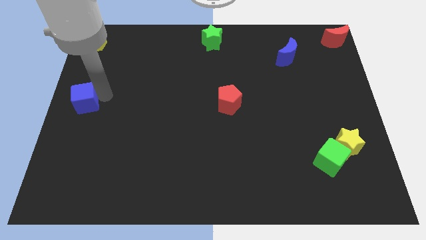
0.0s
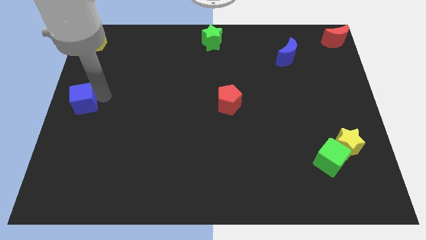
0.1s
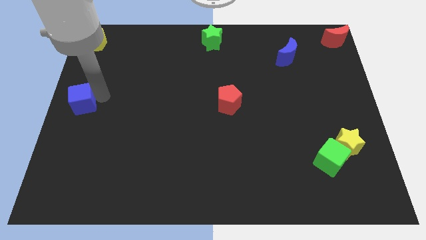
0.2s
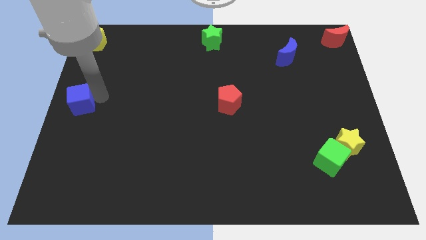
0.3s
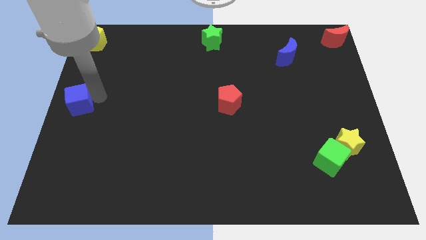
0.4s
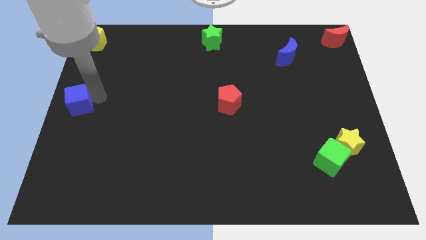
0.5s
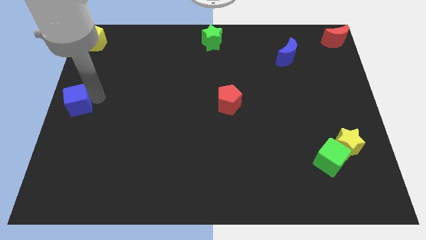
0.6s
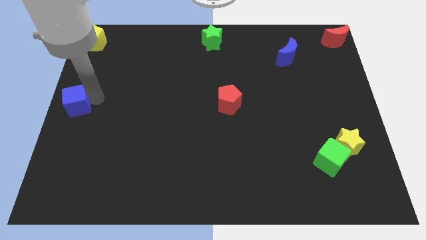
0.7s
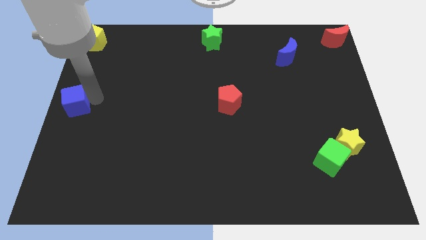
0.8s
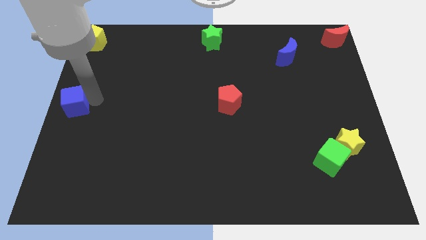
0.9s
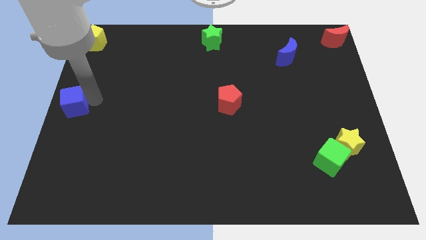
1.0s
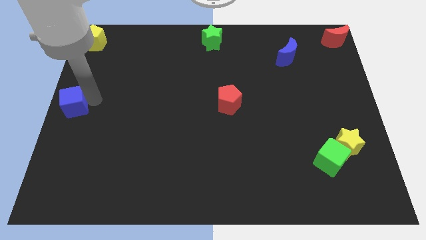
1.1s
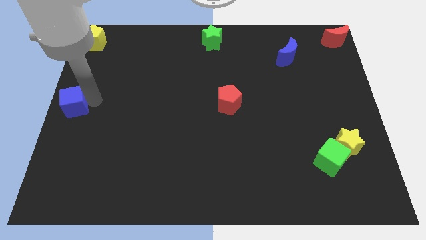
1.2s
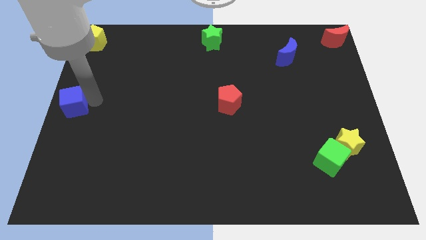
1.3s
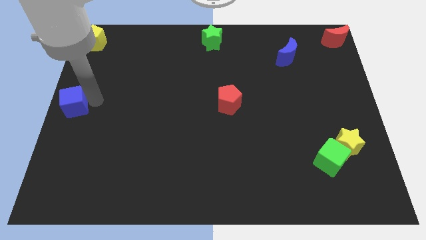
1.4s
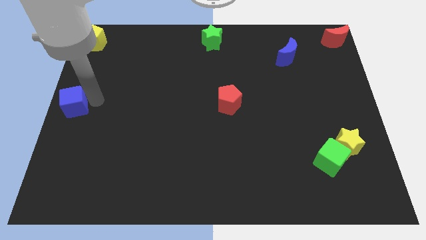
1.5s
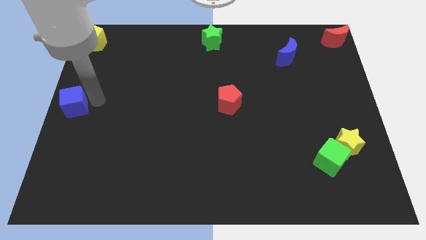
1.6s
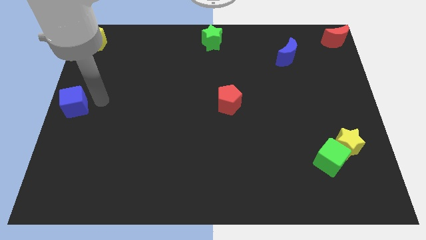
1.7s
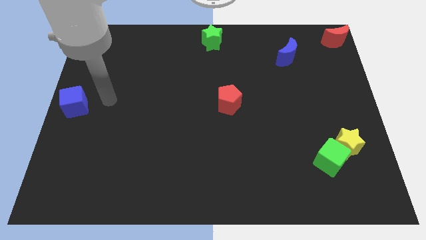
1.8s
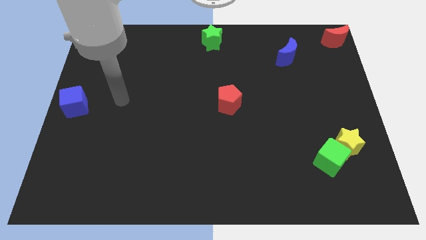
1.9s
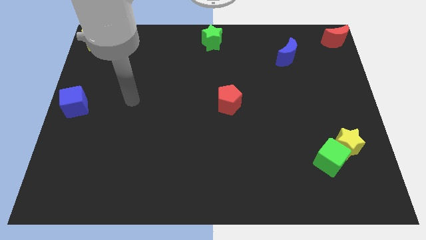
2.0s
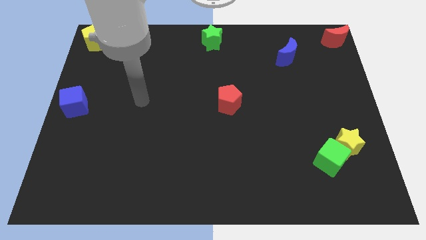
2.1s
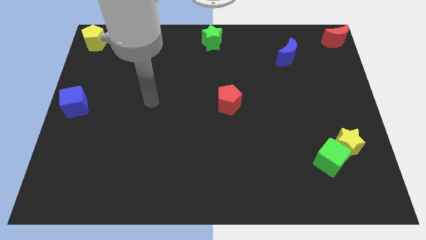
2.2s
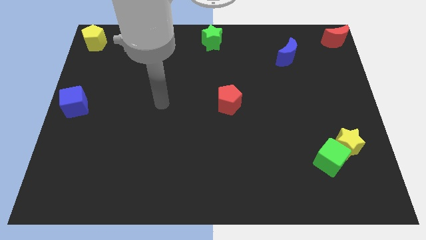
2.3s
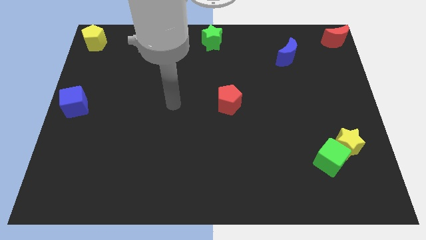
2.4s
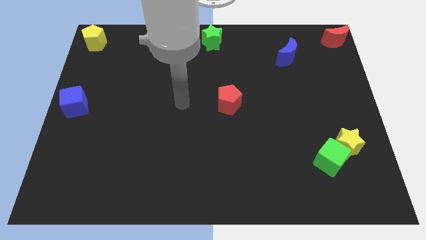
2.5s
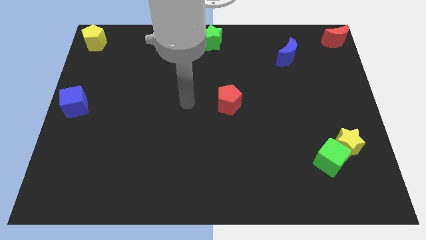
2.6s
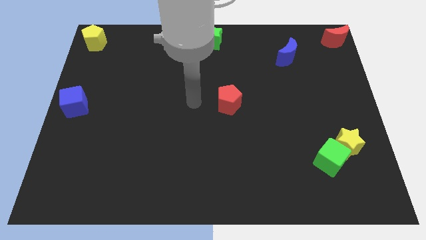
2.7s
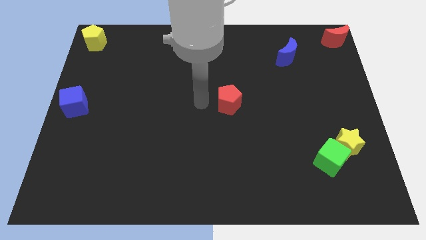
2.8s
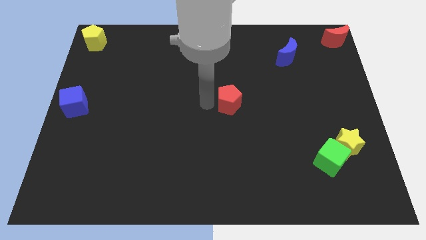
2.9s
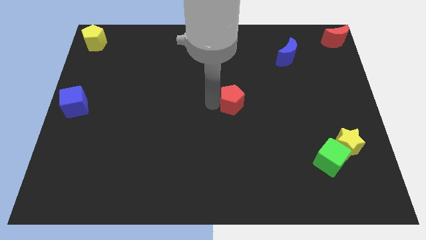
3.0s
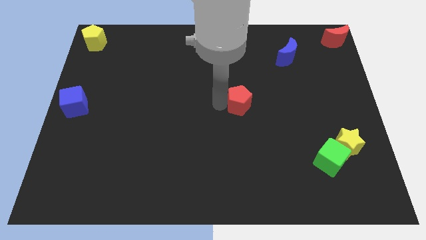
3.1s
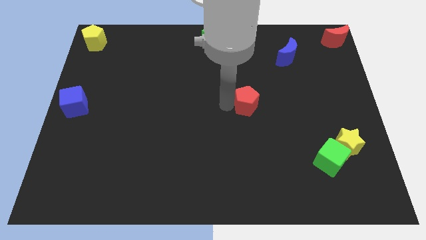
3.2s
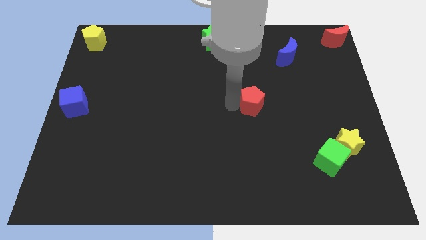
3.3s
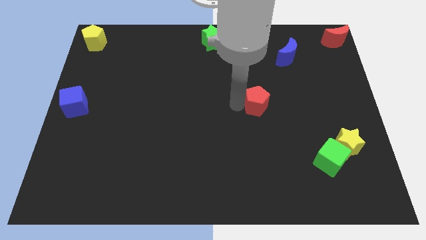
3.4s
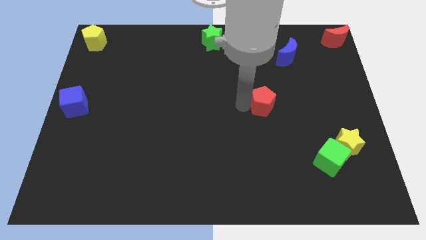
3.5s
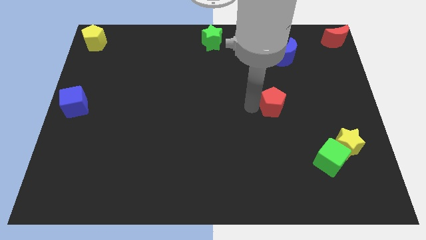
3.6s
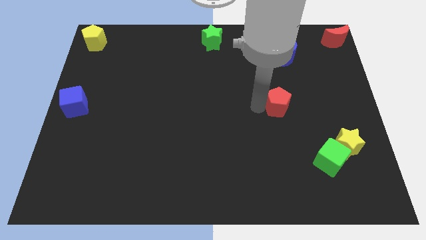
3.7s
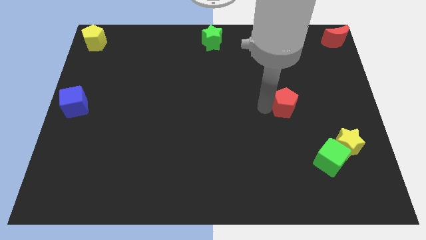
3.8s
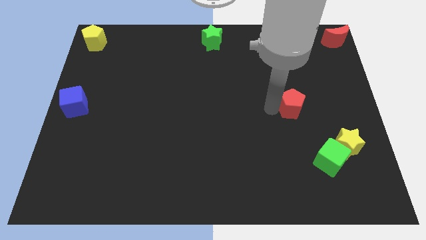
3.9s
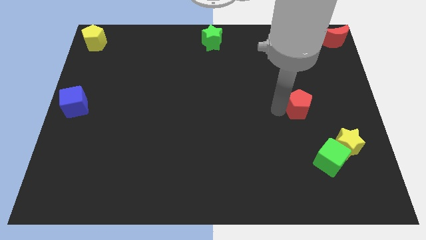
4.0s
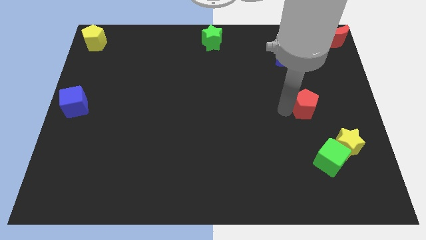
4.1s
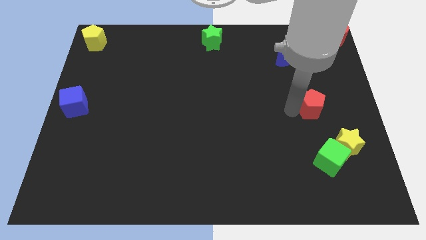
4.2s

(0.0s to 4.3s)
put the red pentagon above the green cube

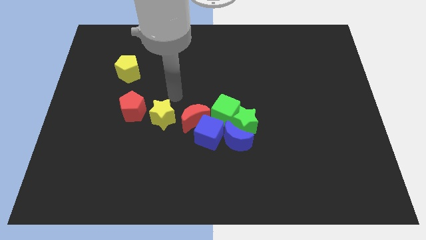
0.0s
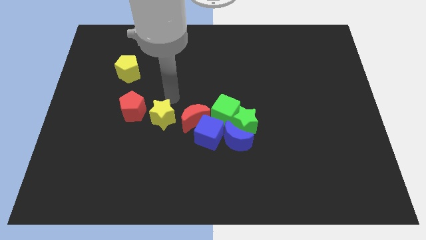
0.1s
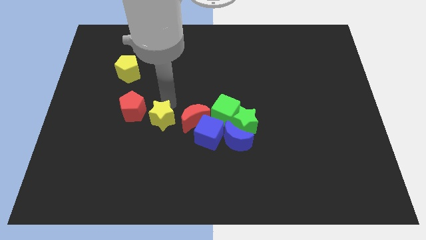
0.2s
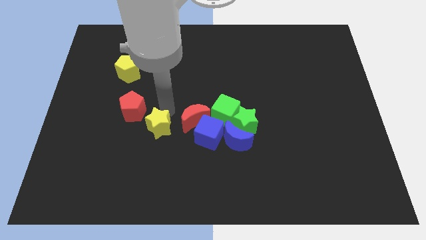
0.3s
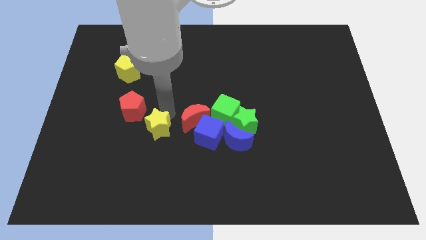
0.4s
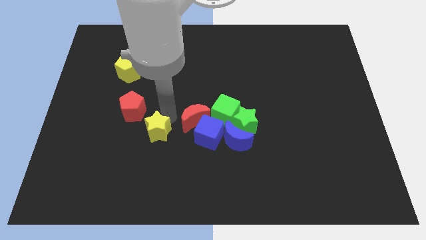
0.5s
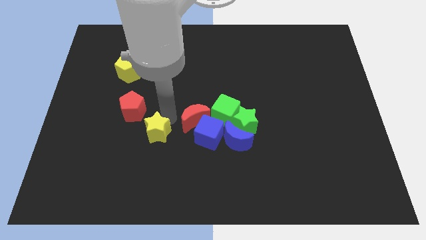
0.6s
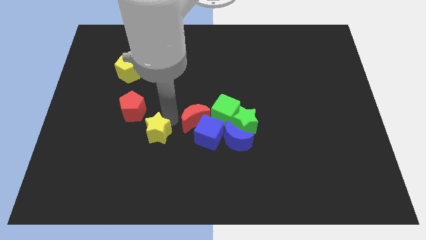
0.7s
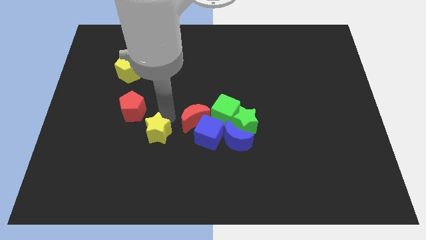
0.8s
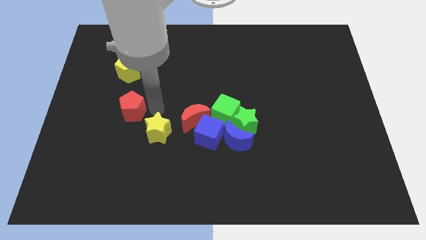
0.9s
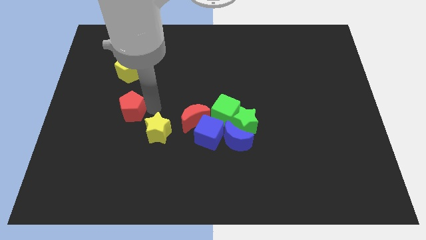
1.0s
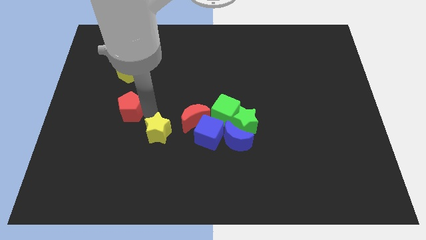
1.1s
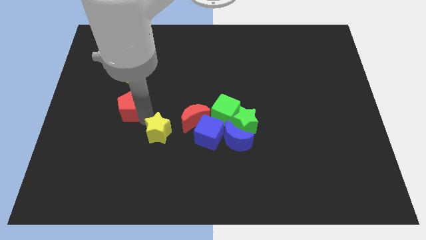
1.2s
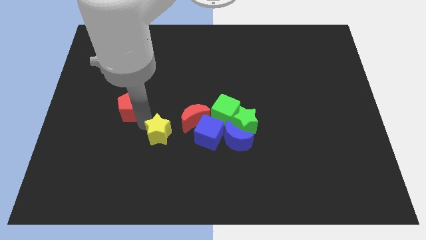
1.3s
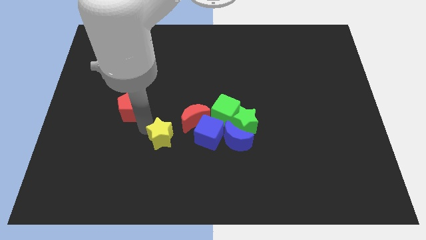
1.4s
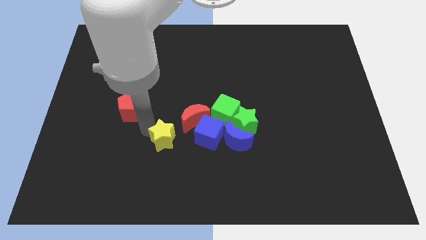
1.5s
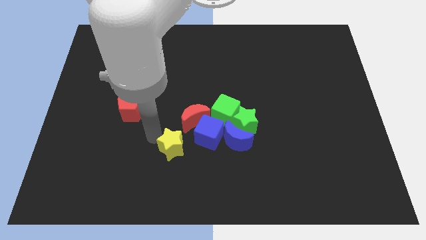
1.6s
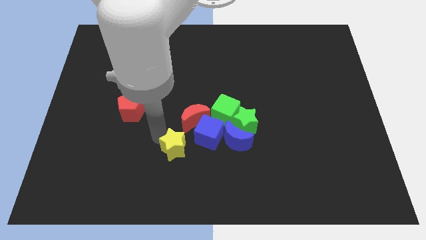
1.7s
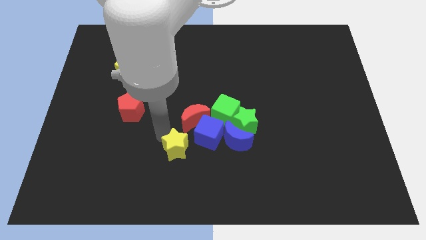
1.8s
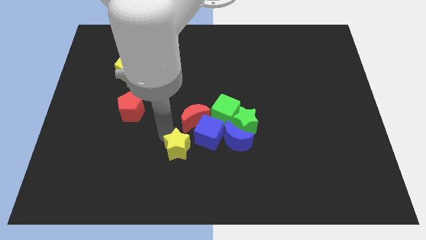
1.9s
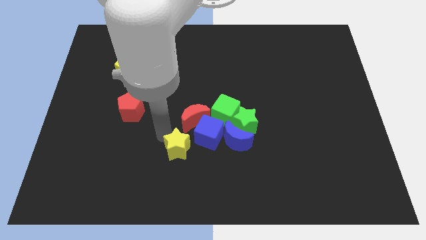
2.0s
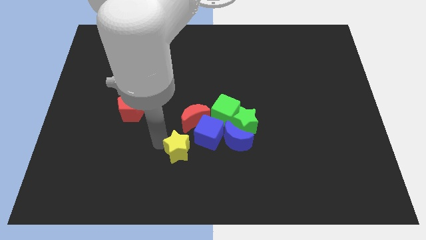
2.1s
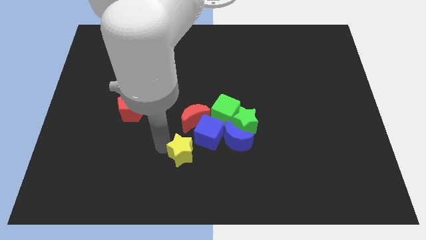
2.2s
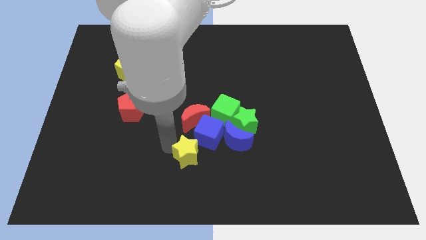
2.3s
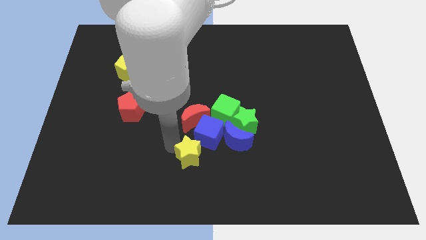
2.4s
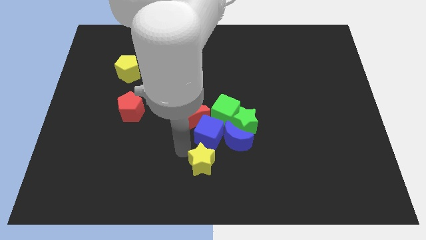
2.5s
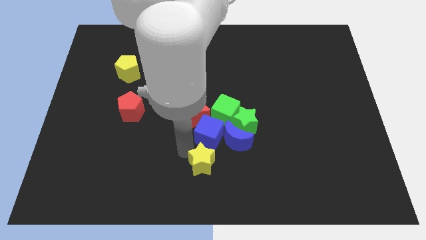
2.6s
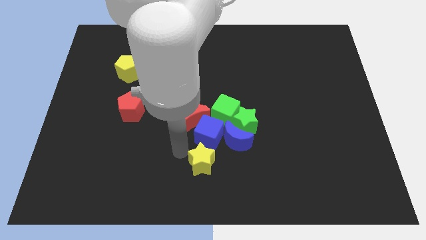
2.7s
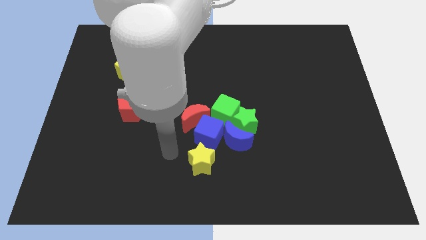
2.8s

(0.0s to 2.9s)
push the yellow star below the blue moon

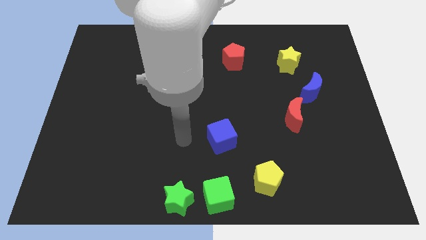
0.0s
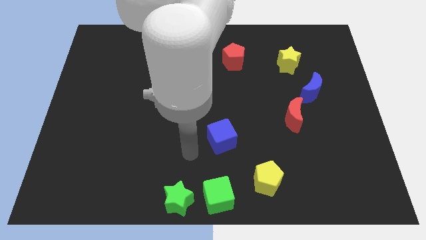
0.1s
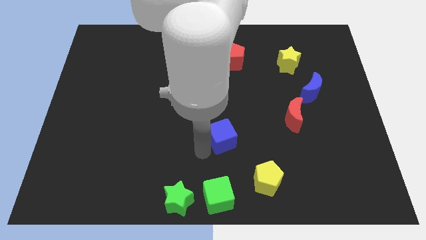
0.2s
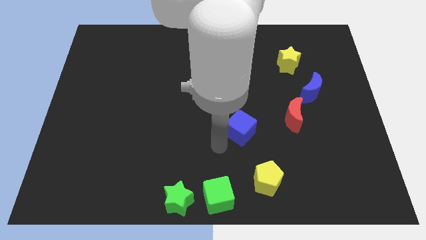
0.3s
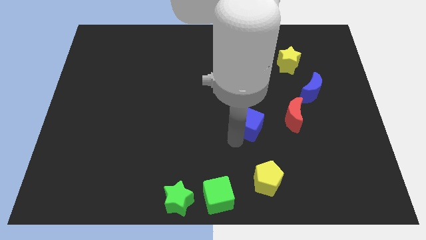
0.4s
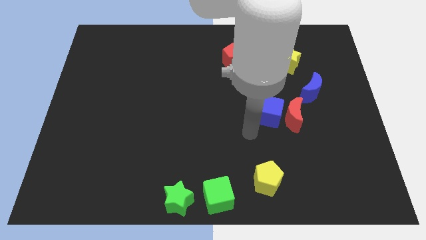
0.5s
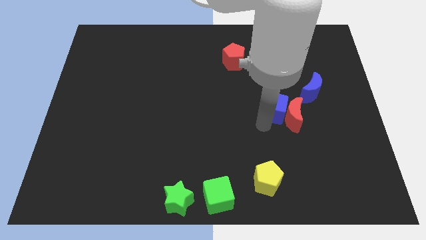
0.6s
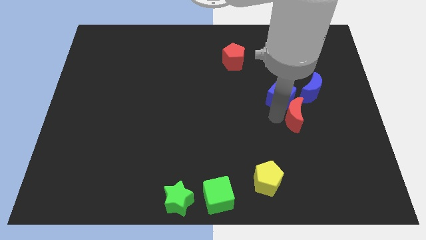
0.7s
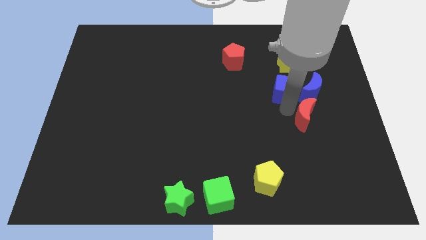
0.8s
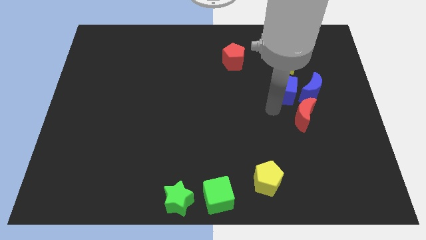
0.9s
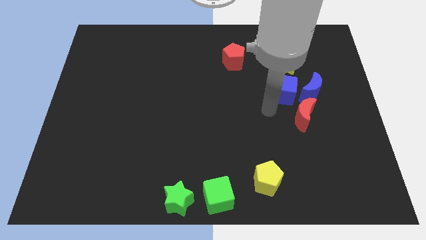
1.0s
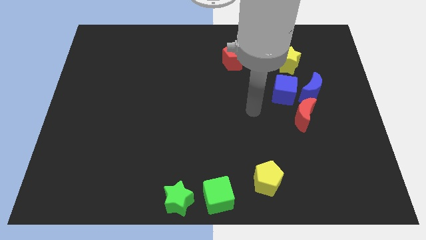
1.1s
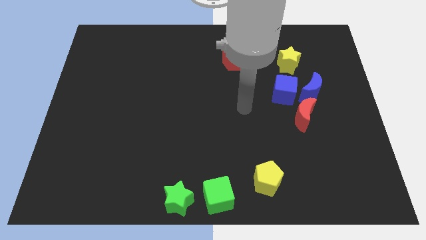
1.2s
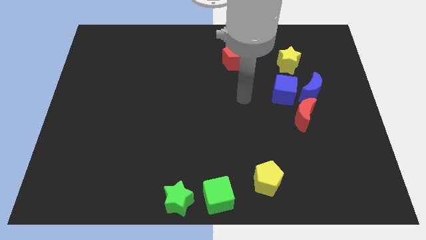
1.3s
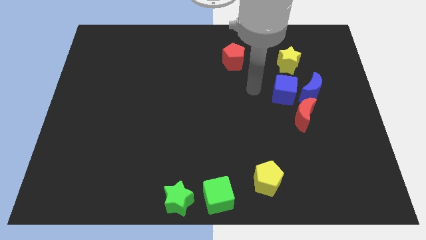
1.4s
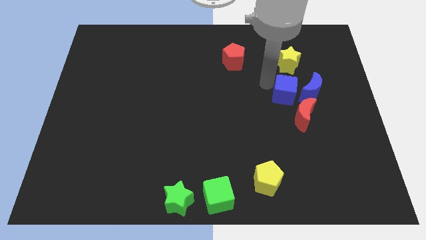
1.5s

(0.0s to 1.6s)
push the blue cube to the left of the blue crescent
